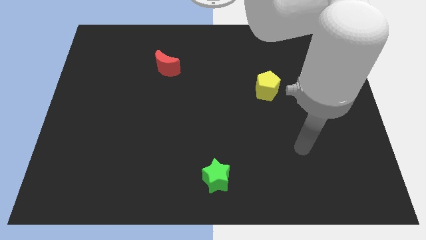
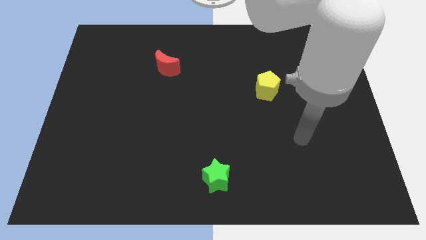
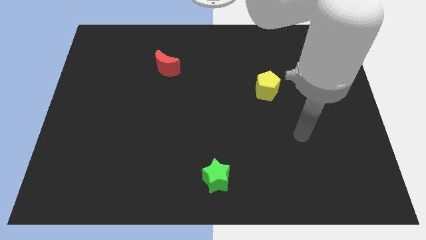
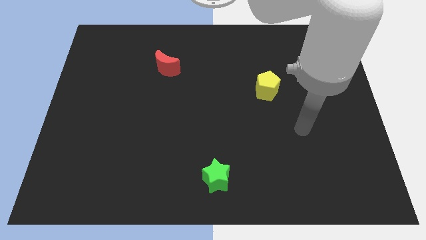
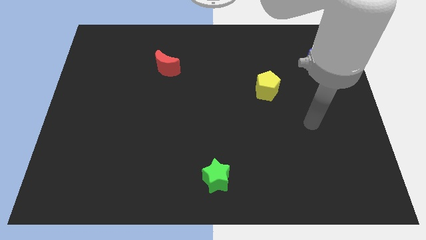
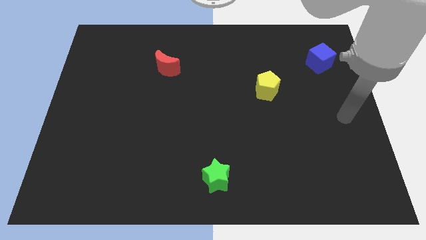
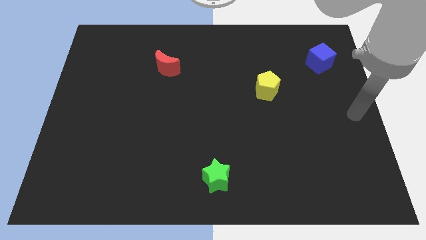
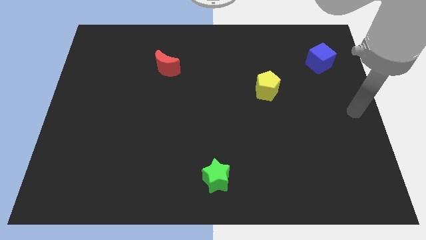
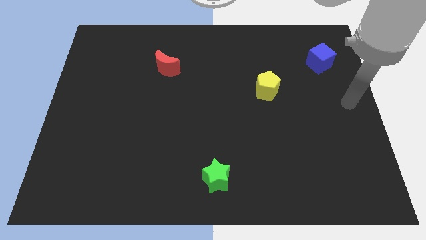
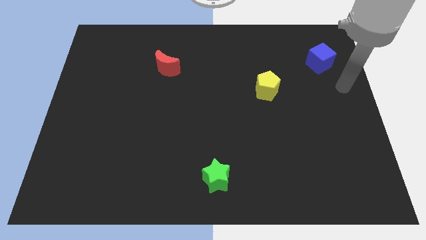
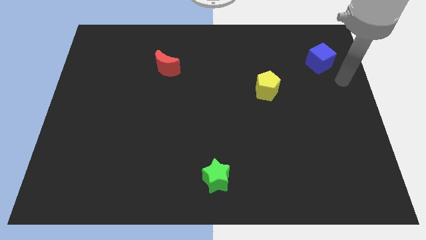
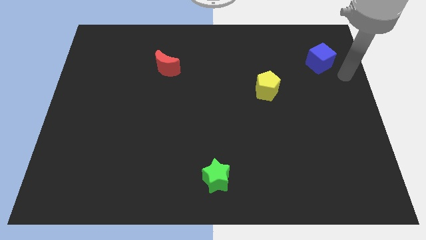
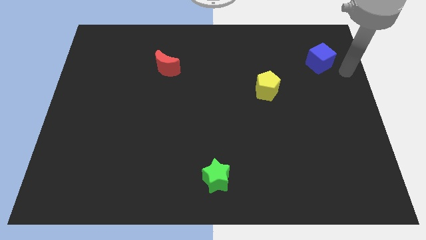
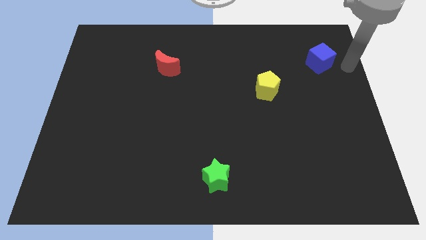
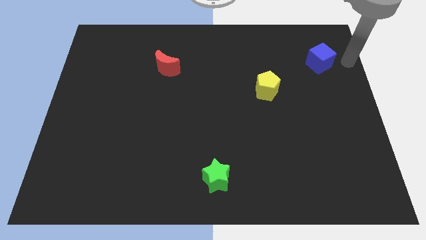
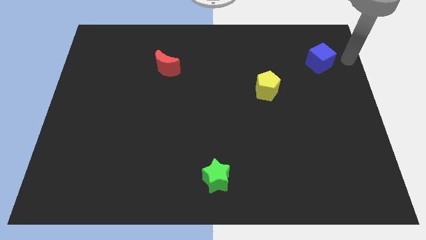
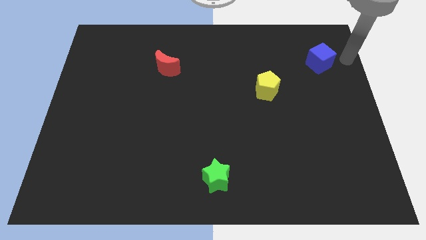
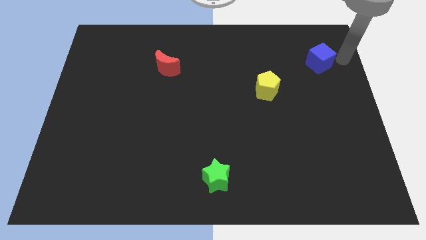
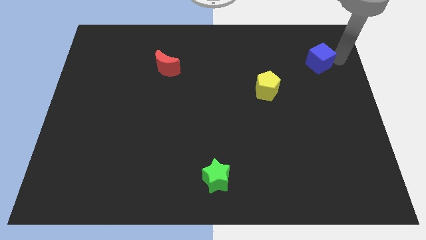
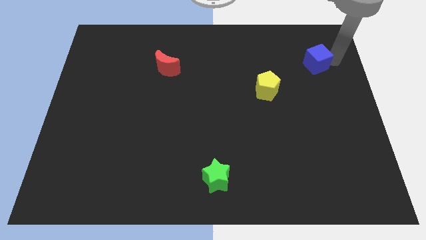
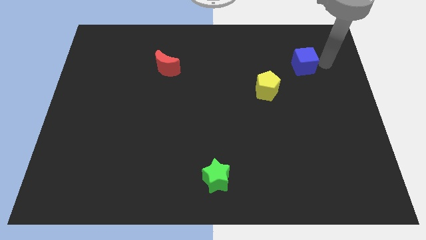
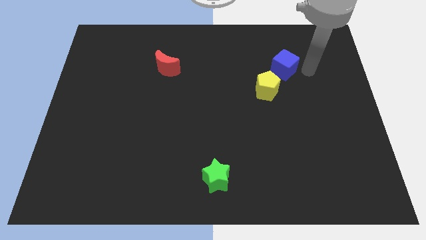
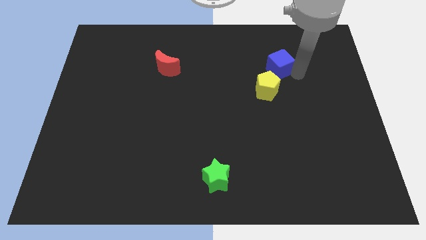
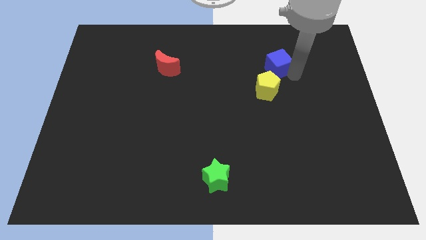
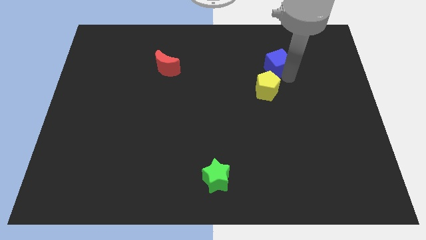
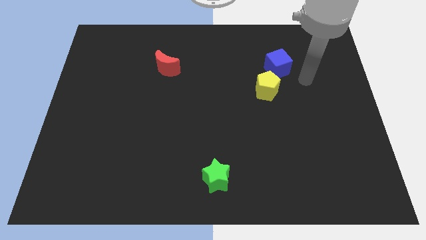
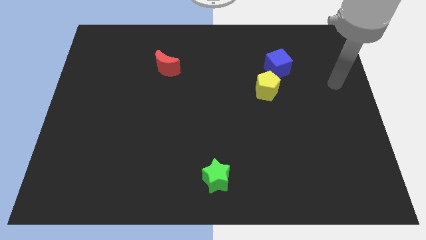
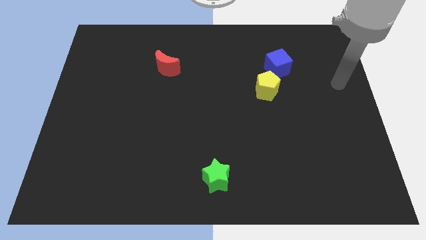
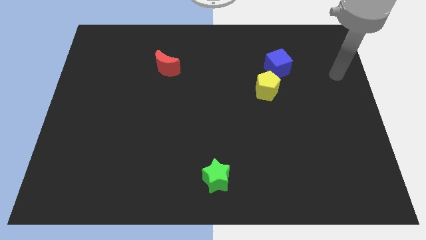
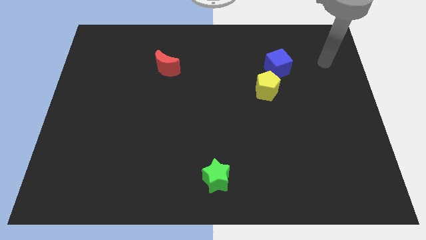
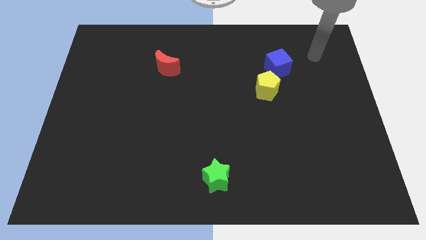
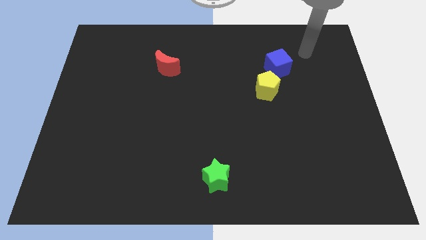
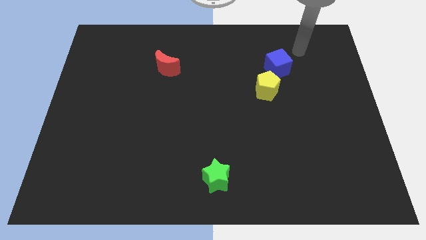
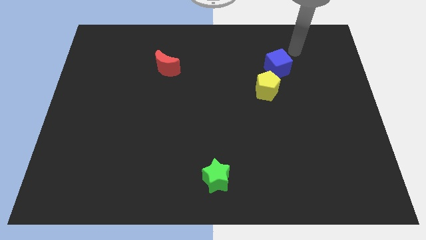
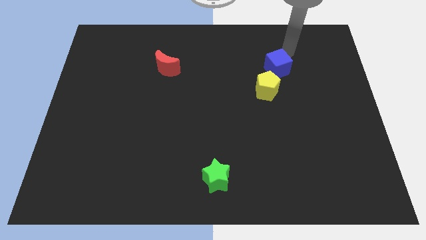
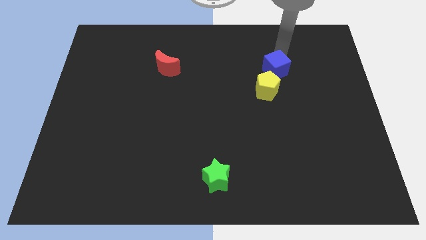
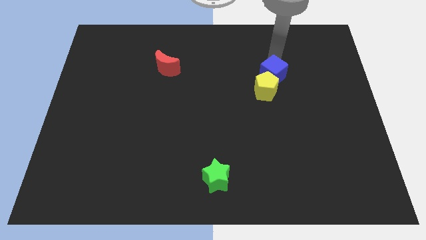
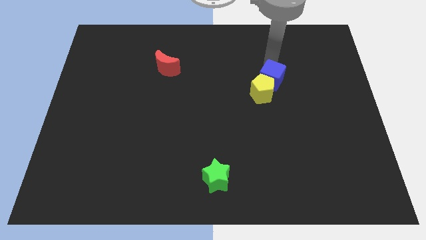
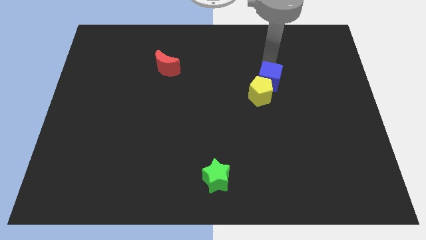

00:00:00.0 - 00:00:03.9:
push the blue block to the yellow block

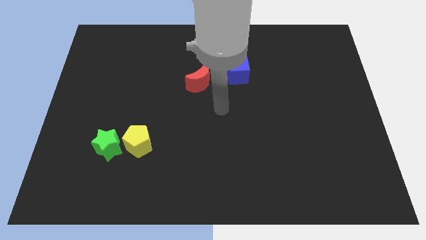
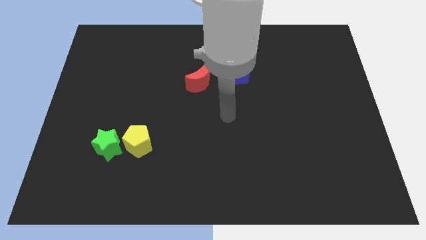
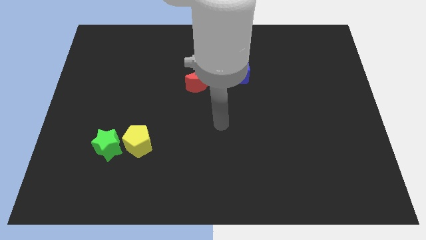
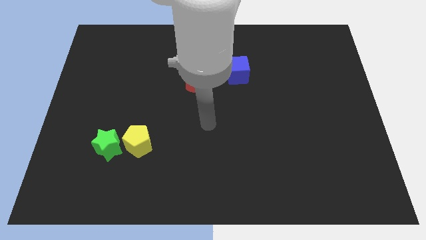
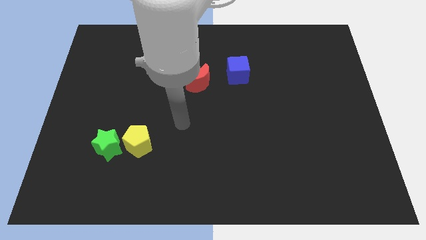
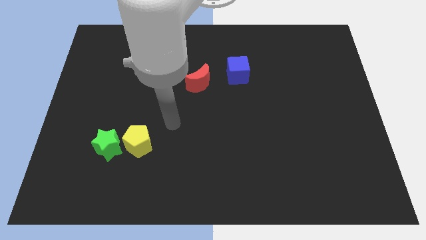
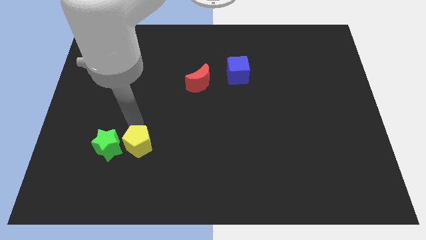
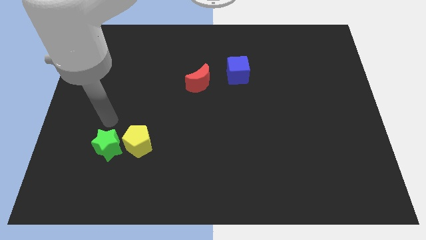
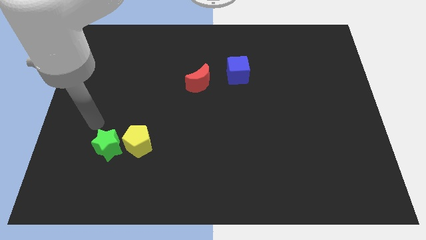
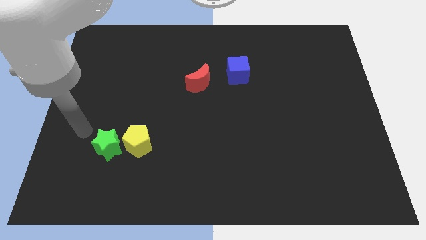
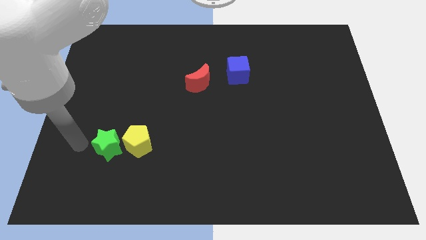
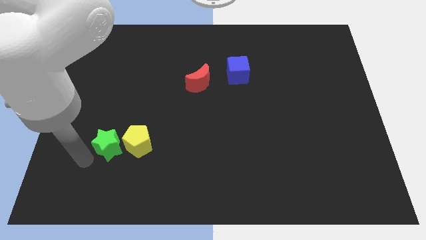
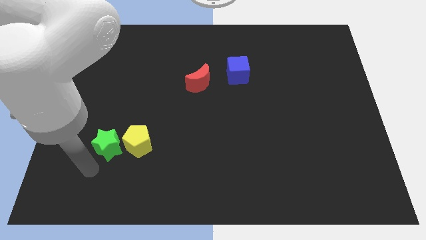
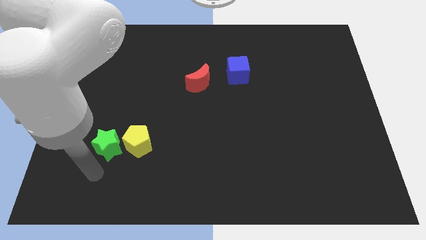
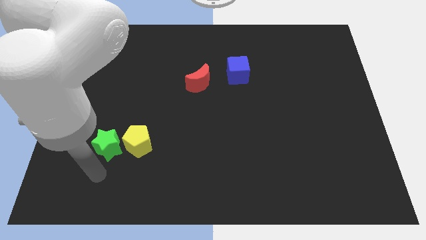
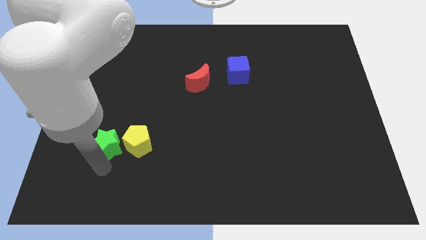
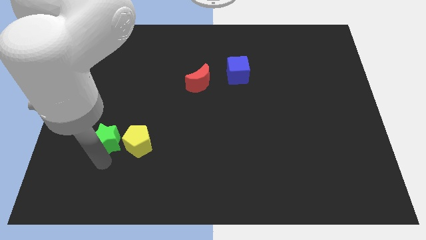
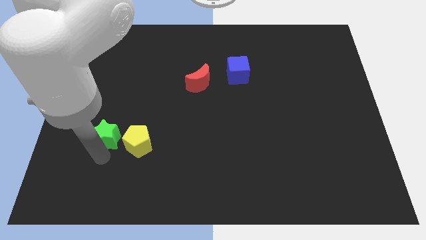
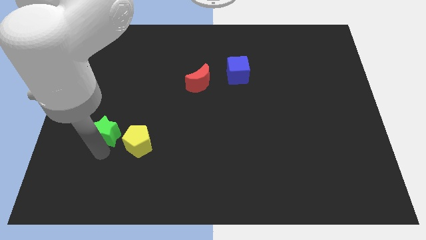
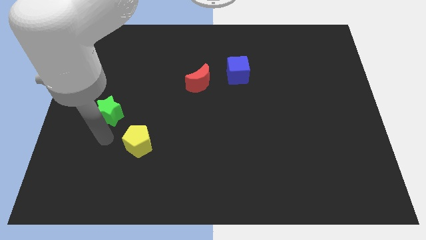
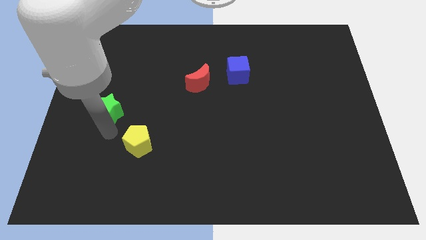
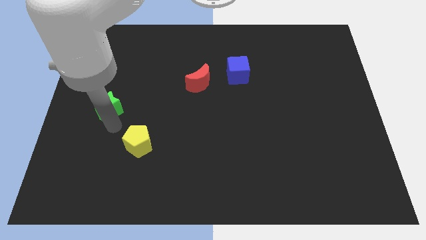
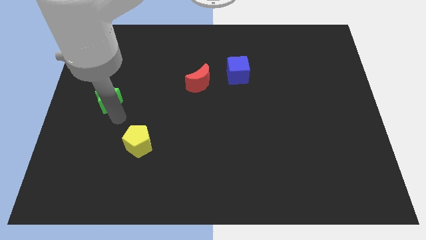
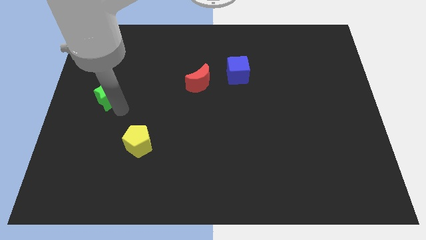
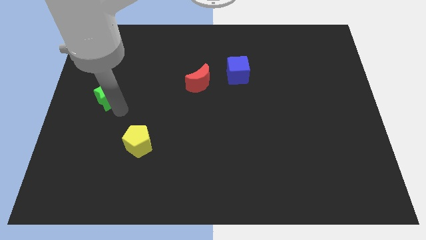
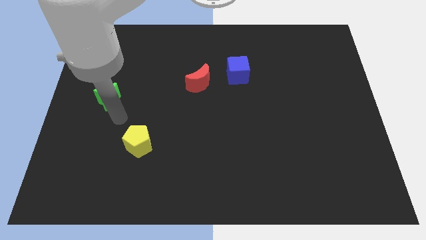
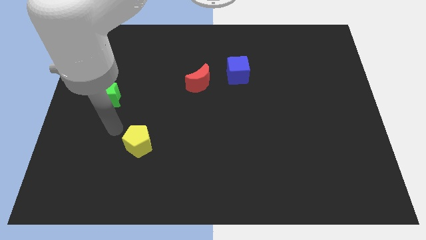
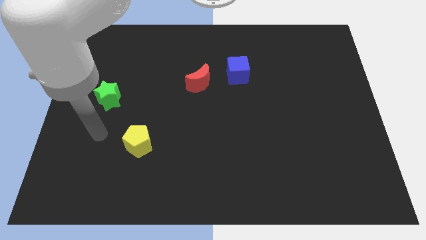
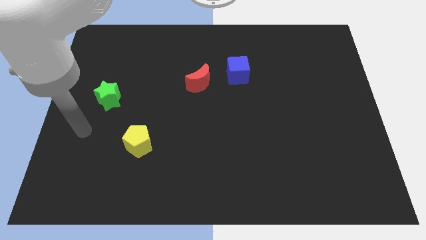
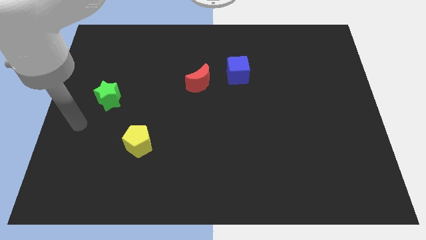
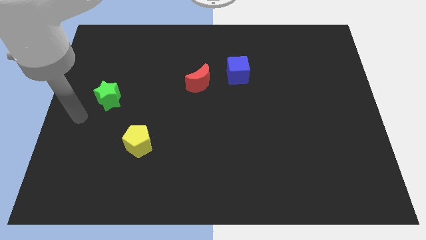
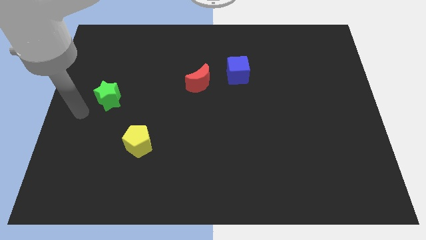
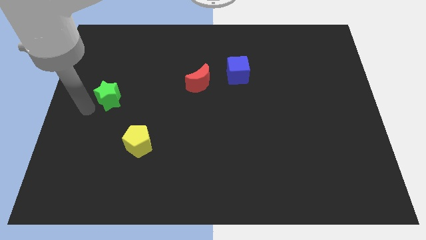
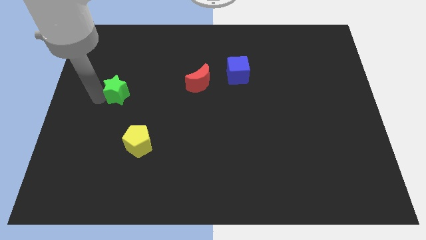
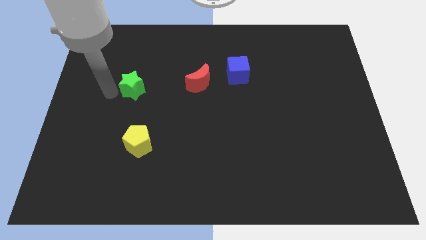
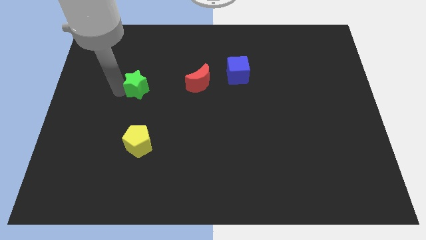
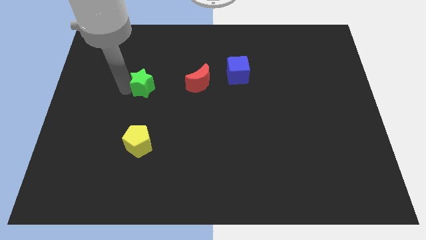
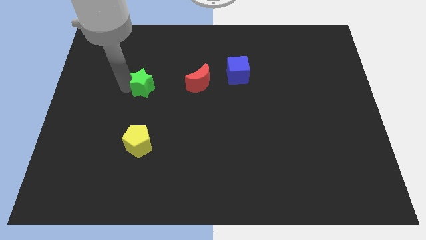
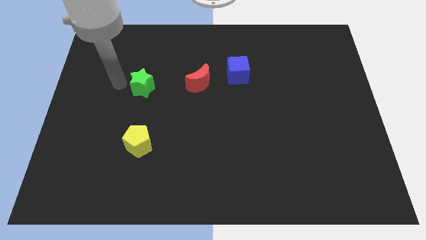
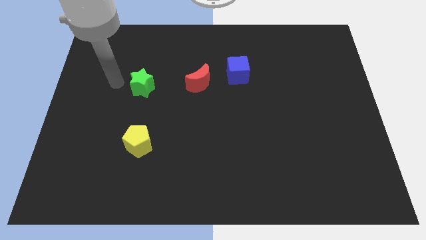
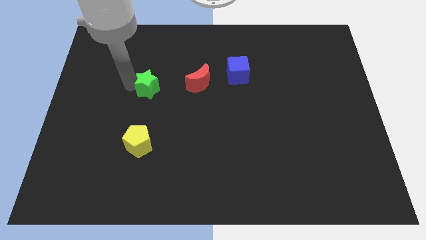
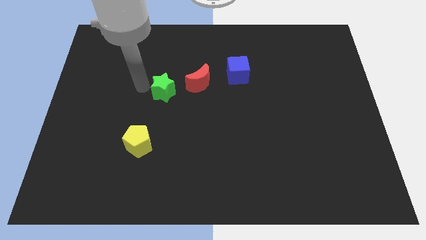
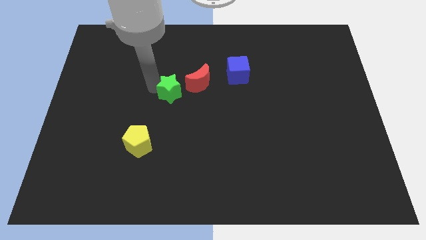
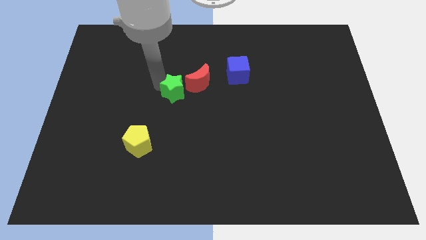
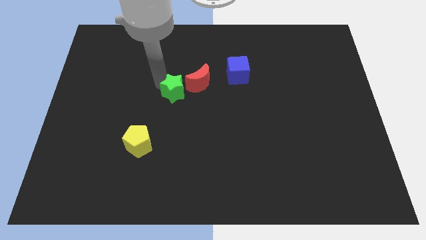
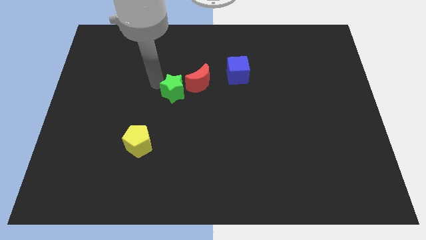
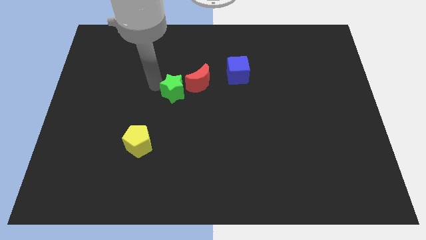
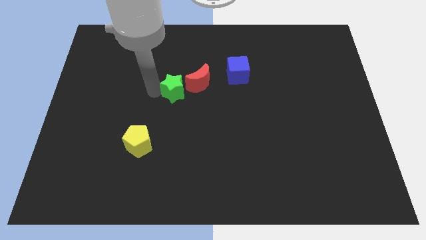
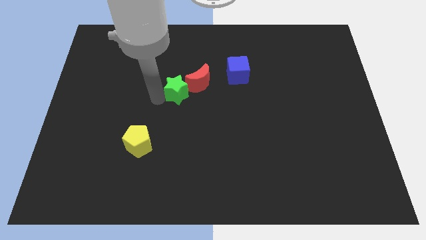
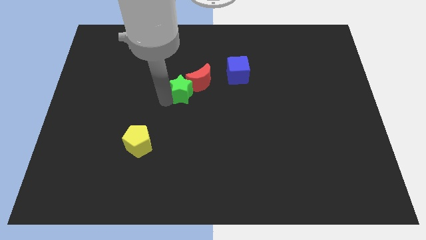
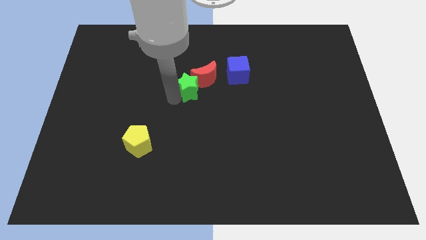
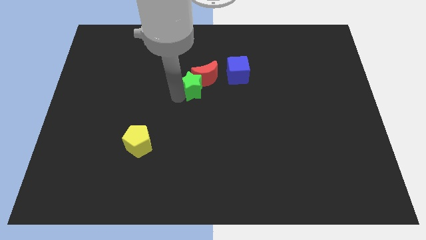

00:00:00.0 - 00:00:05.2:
put the green block next to the moon
